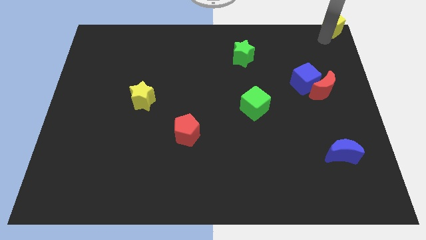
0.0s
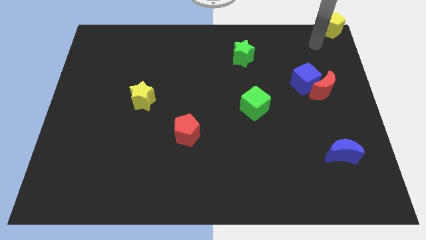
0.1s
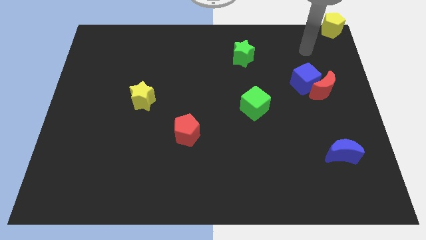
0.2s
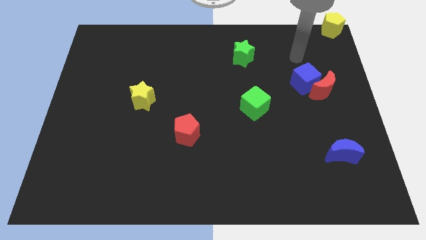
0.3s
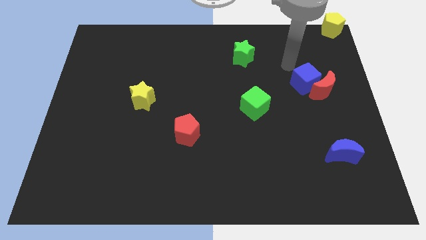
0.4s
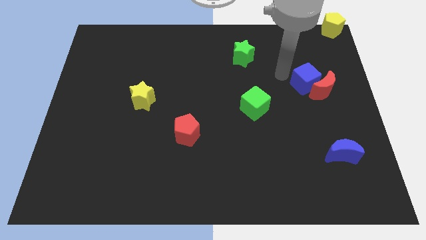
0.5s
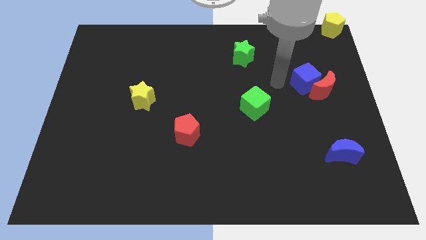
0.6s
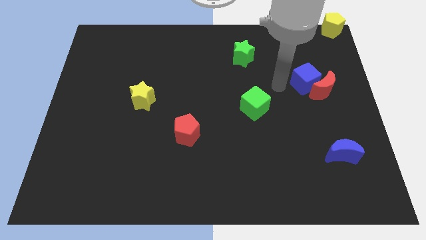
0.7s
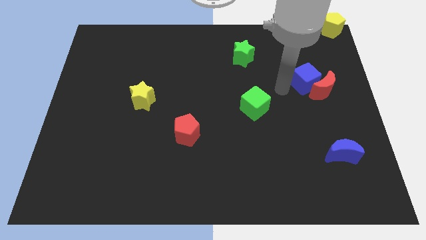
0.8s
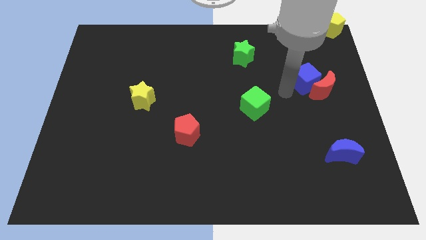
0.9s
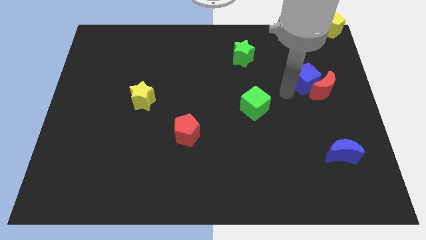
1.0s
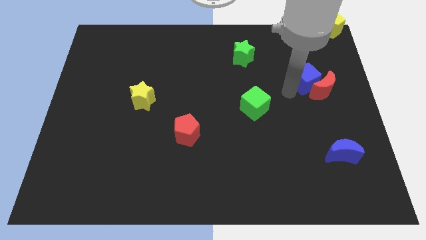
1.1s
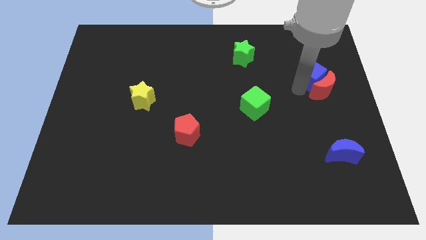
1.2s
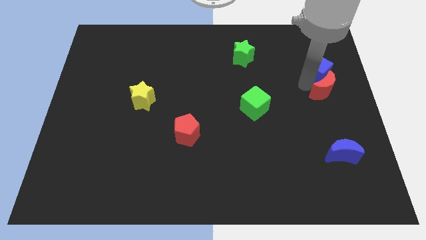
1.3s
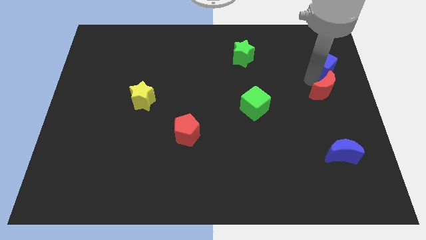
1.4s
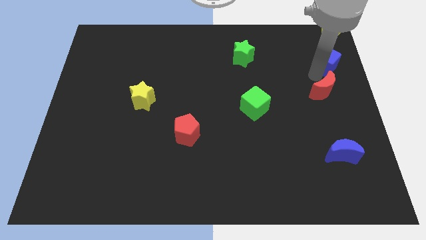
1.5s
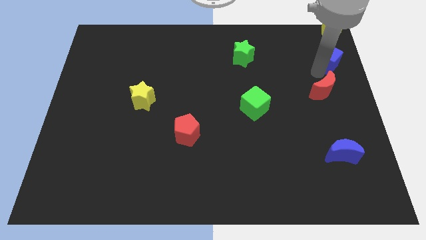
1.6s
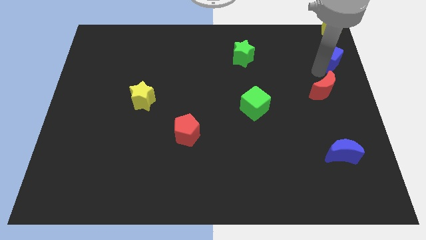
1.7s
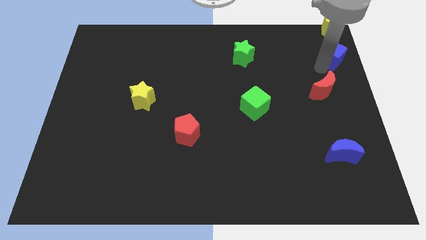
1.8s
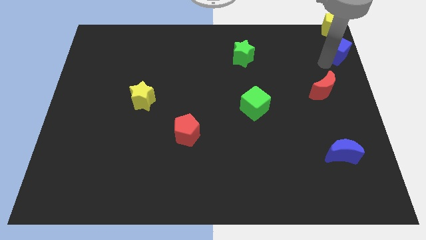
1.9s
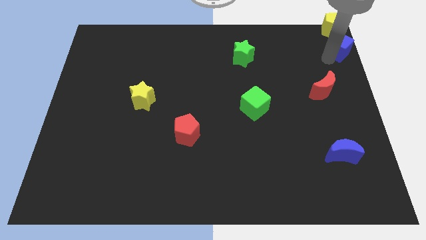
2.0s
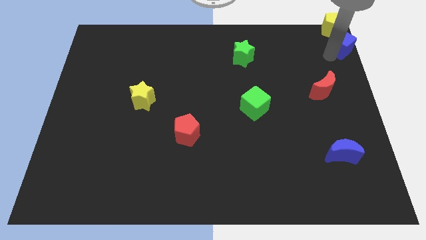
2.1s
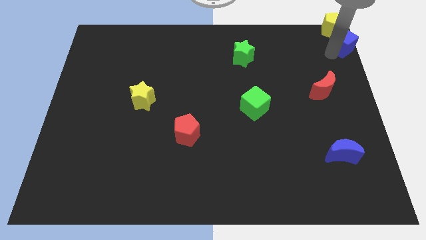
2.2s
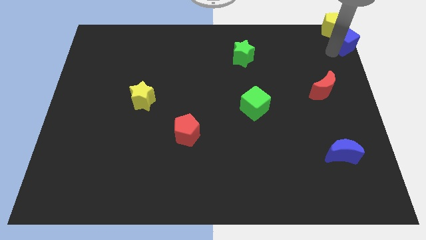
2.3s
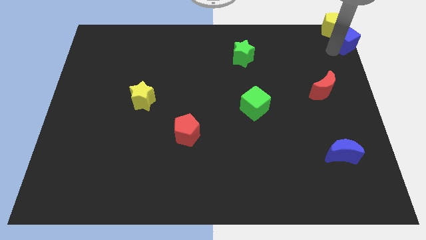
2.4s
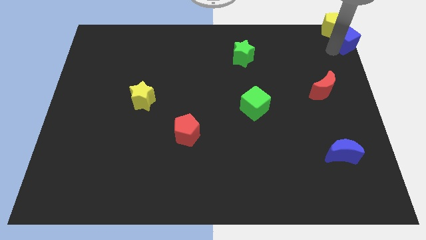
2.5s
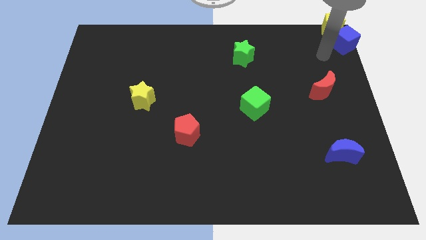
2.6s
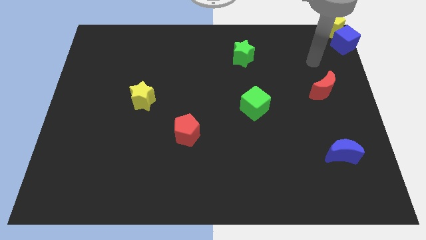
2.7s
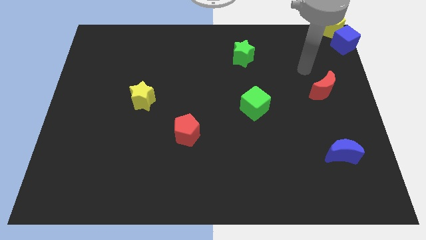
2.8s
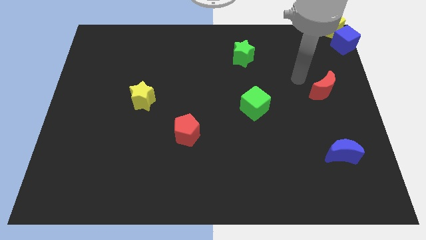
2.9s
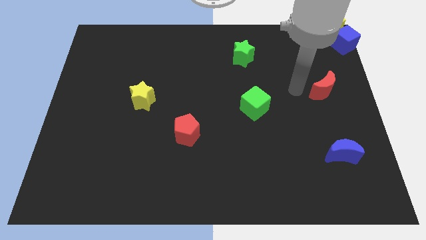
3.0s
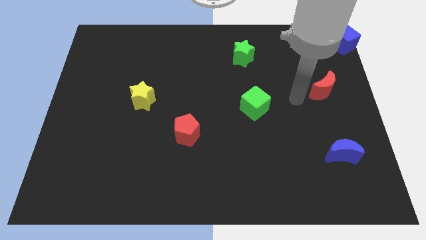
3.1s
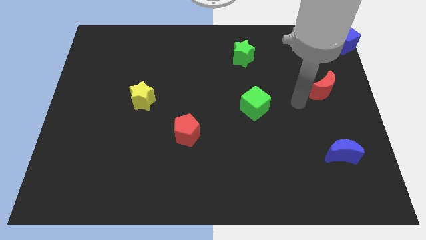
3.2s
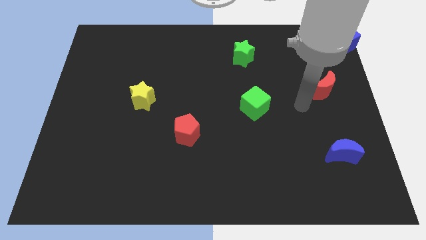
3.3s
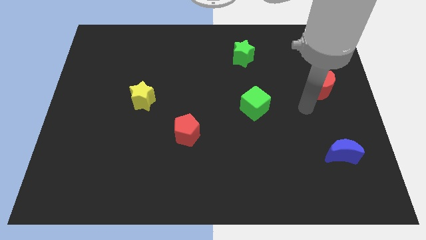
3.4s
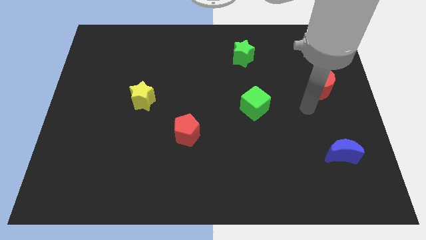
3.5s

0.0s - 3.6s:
move the blue cube into the yellow pentagon

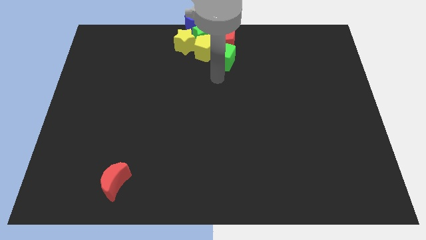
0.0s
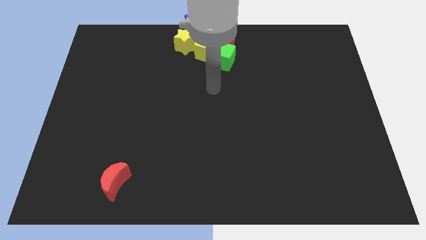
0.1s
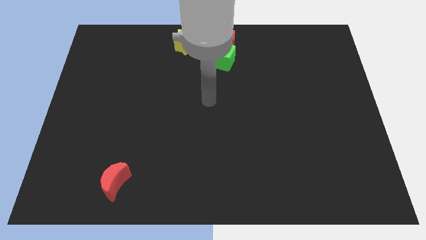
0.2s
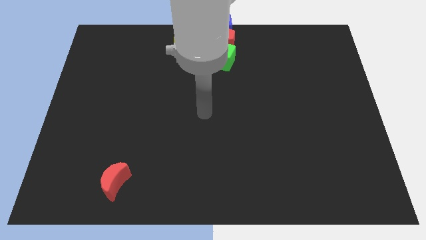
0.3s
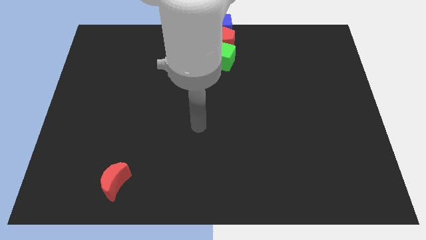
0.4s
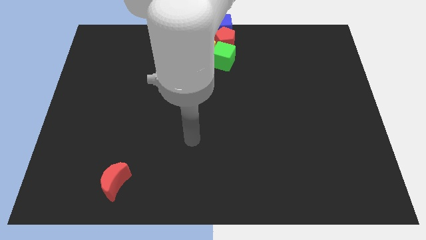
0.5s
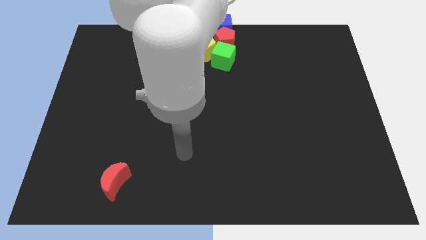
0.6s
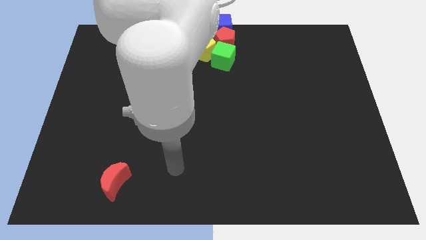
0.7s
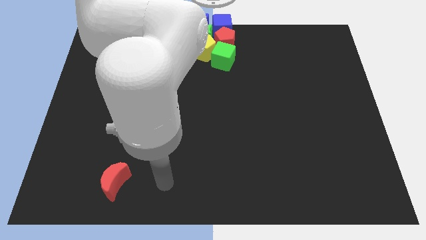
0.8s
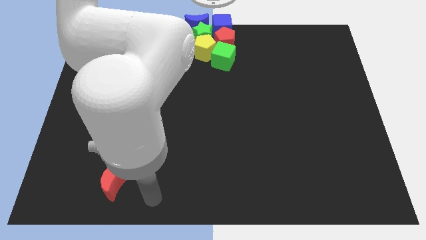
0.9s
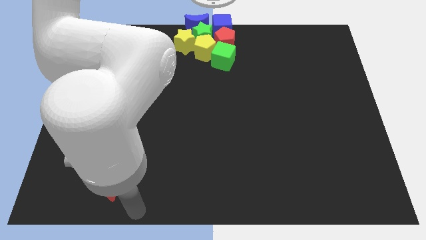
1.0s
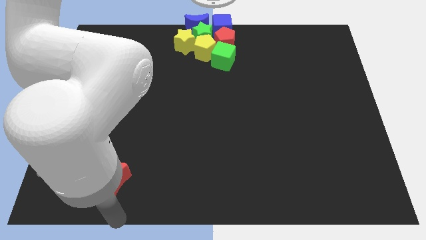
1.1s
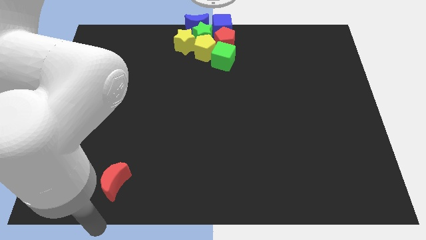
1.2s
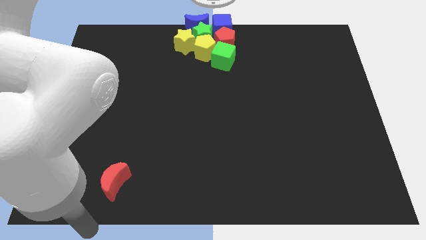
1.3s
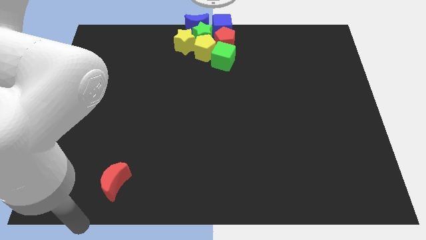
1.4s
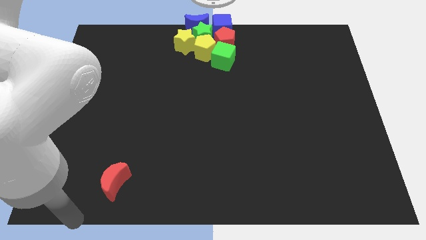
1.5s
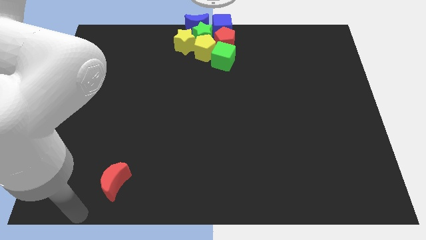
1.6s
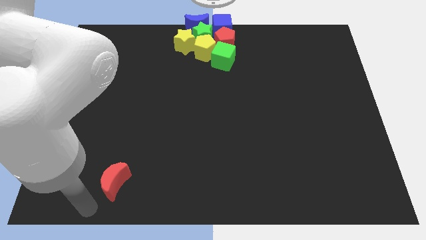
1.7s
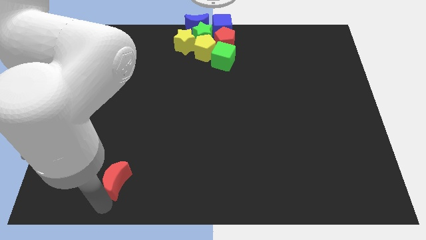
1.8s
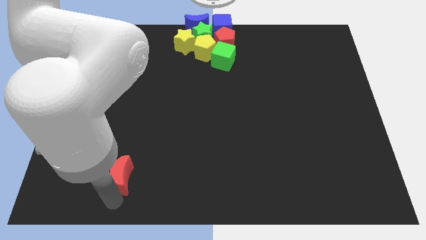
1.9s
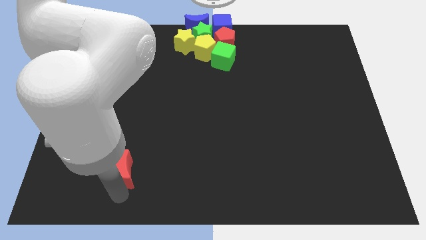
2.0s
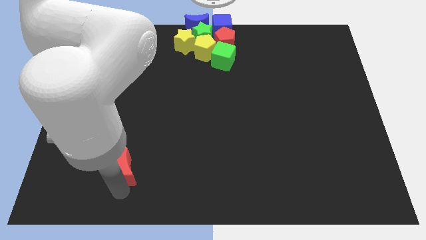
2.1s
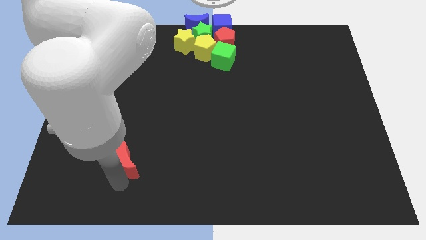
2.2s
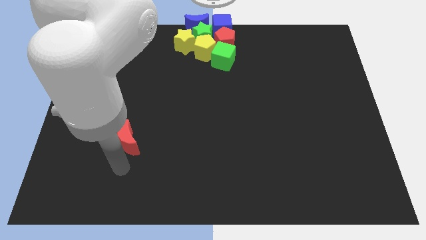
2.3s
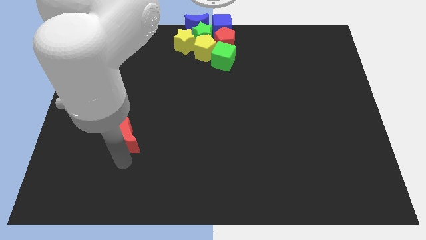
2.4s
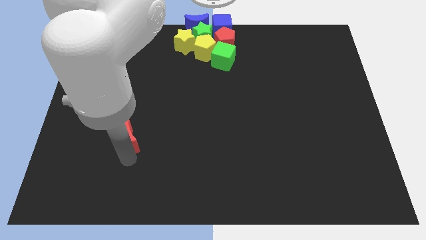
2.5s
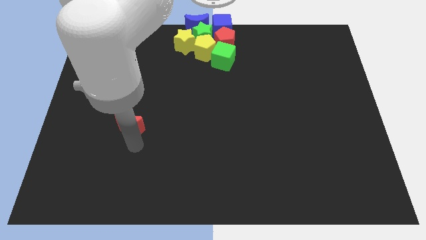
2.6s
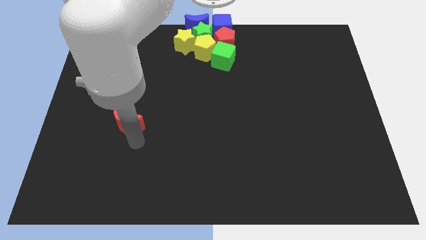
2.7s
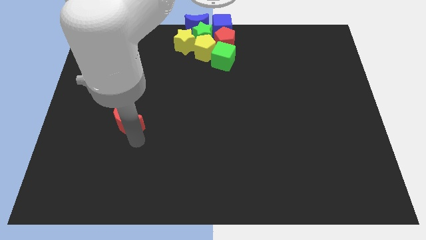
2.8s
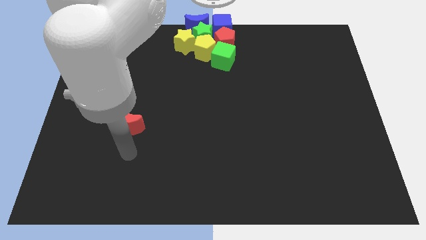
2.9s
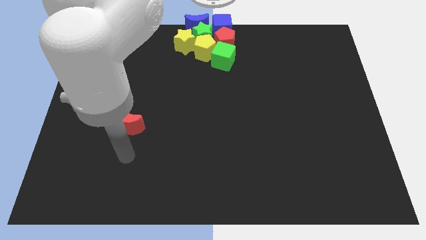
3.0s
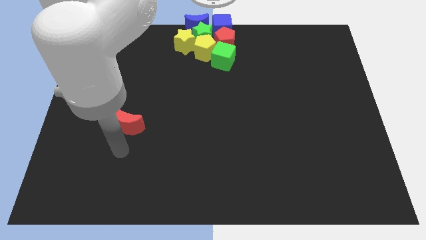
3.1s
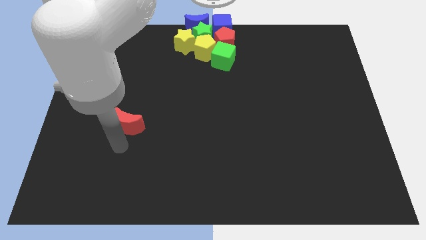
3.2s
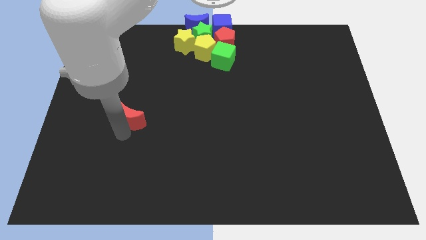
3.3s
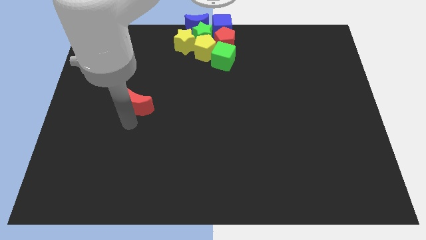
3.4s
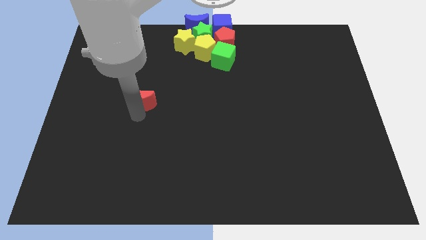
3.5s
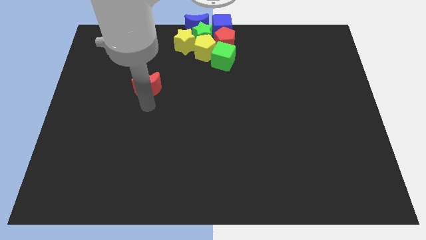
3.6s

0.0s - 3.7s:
move the red crescent towards the group of blocks

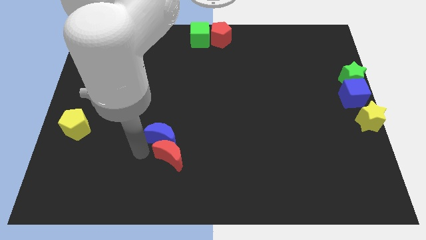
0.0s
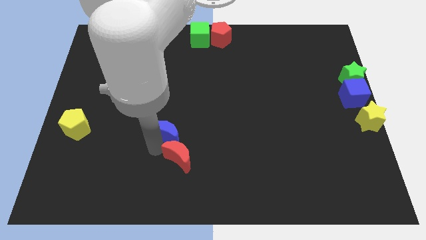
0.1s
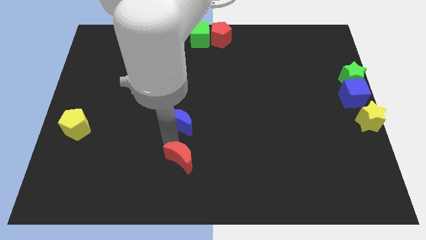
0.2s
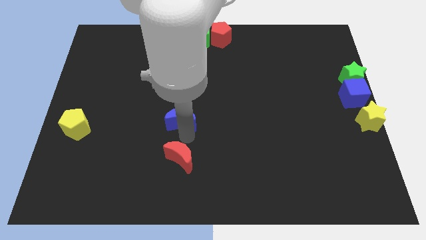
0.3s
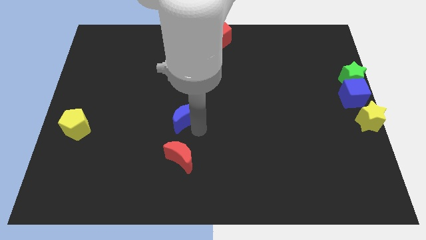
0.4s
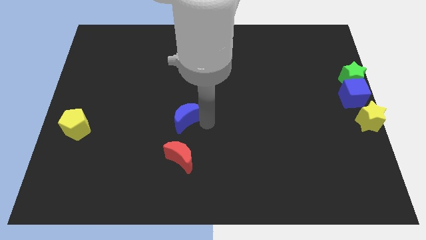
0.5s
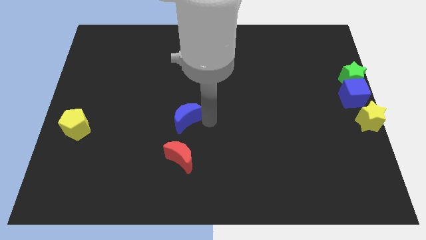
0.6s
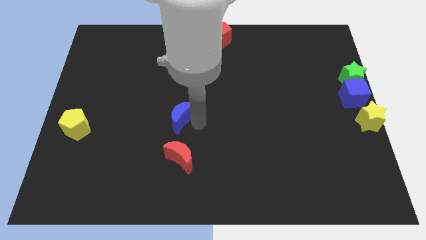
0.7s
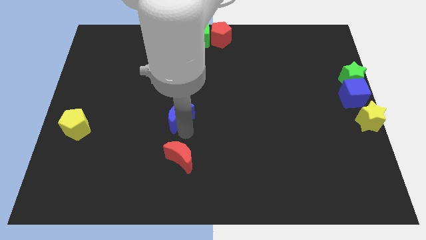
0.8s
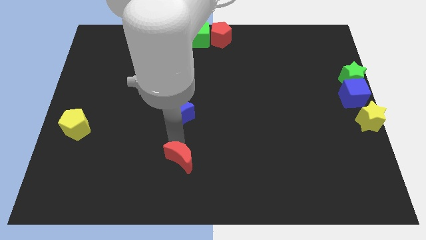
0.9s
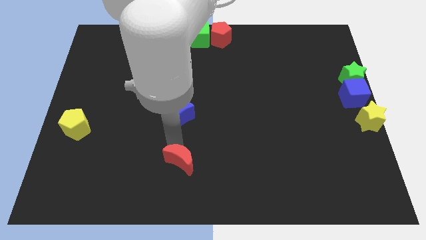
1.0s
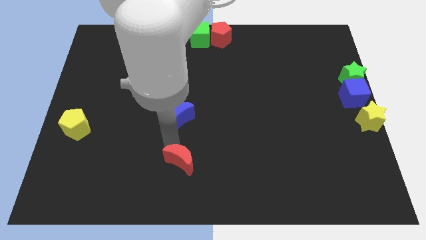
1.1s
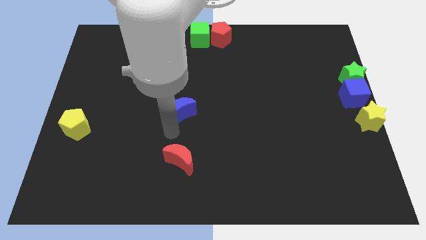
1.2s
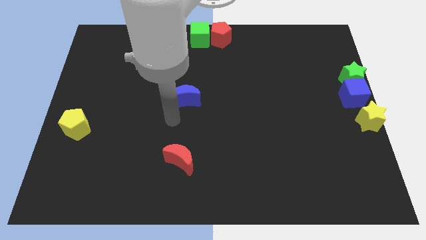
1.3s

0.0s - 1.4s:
separate the red and blue moons

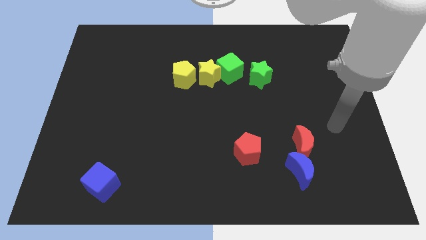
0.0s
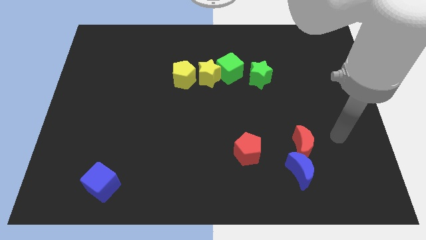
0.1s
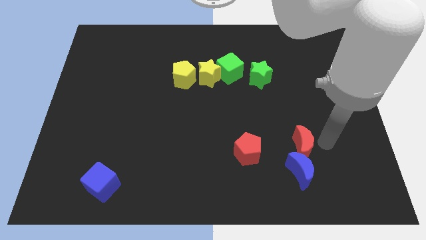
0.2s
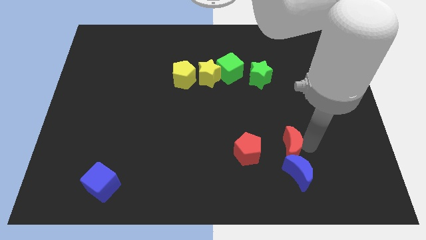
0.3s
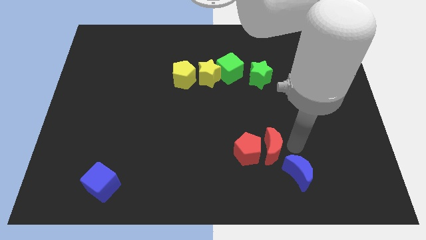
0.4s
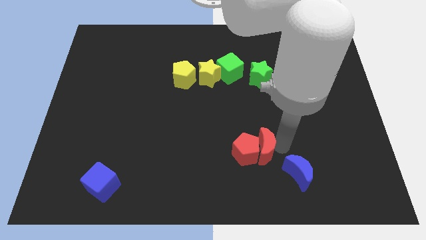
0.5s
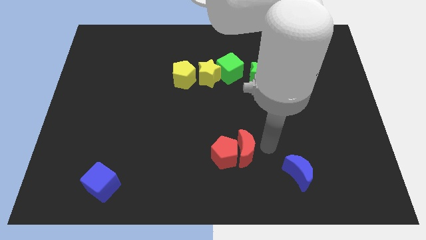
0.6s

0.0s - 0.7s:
slightly push the red crescent into the red pentagon
